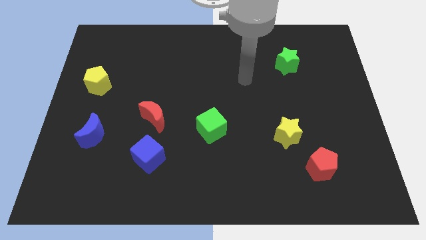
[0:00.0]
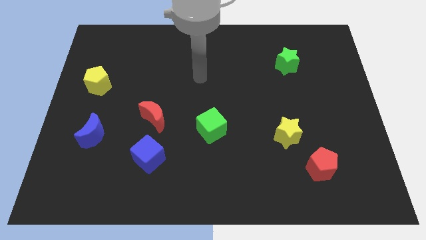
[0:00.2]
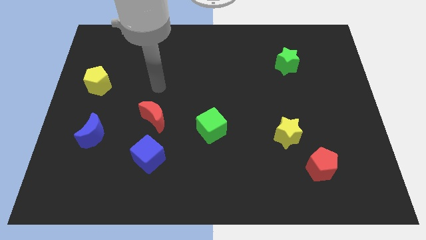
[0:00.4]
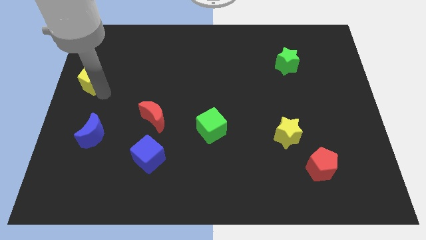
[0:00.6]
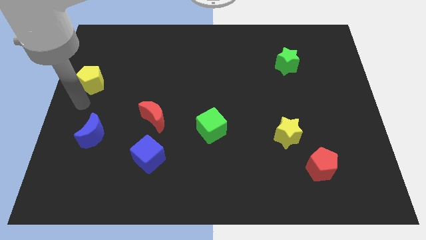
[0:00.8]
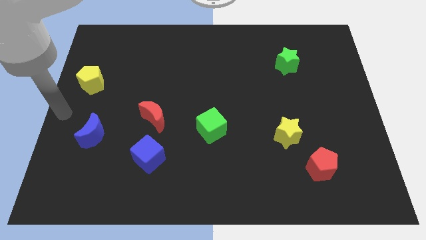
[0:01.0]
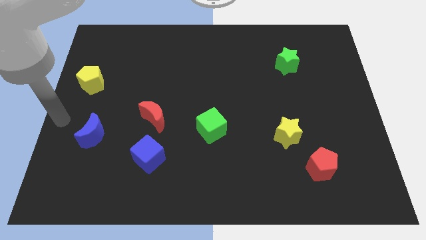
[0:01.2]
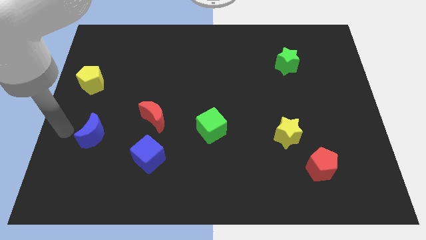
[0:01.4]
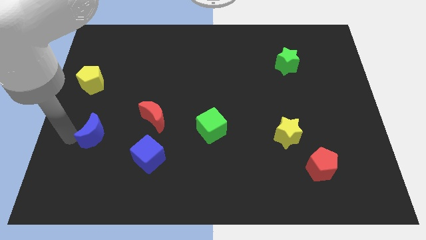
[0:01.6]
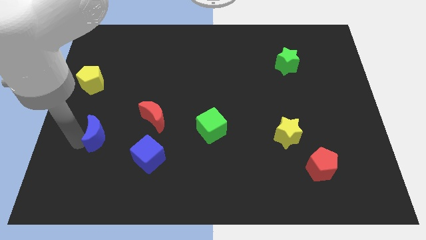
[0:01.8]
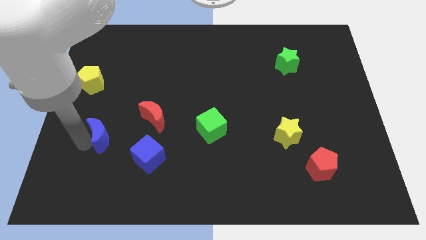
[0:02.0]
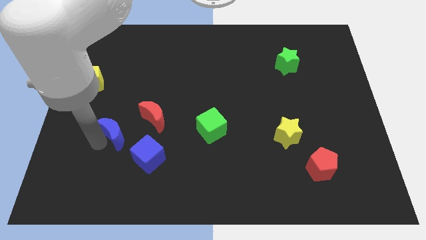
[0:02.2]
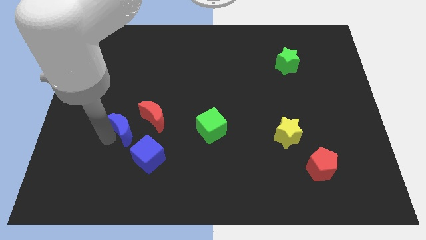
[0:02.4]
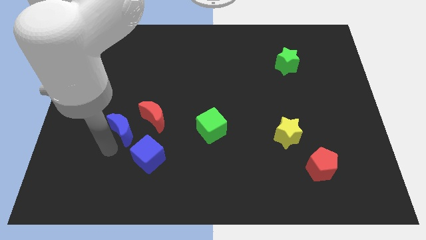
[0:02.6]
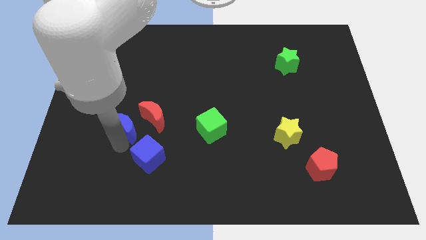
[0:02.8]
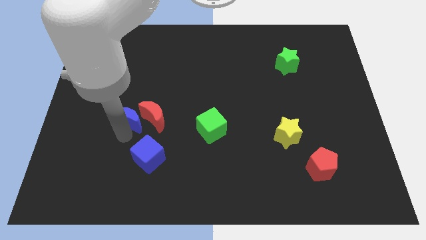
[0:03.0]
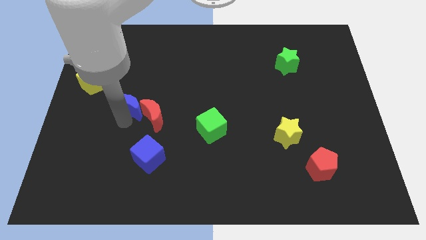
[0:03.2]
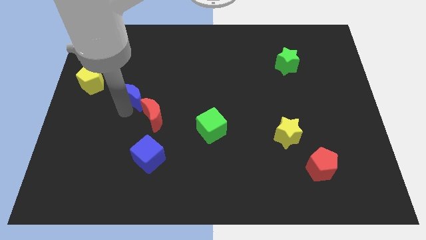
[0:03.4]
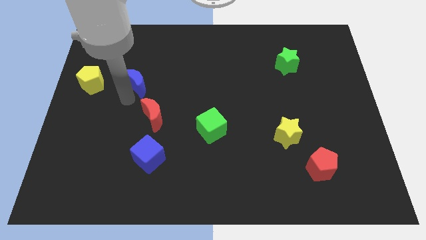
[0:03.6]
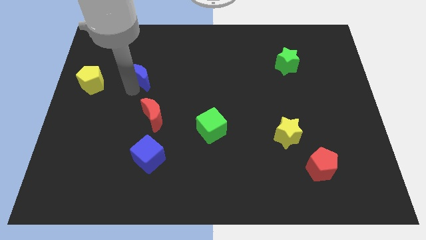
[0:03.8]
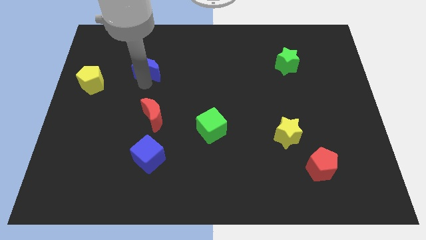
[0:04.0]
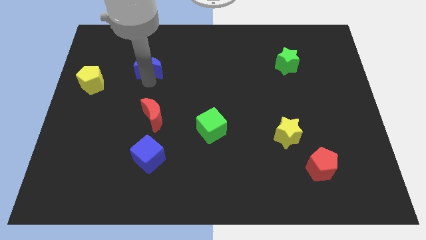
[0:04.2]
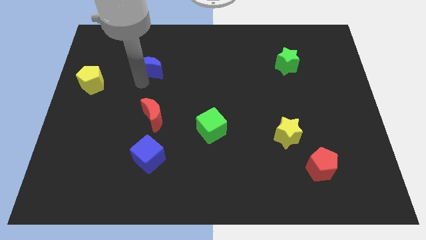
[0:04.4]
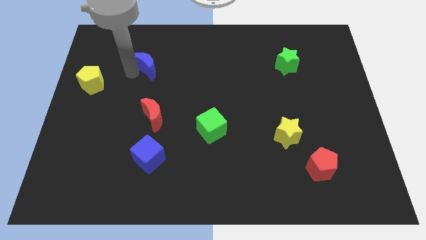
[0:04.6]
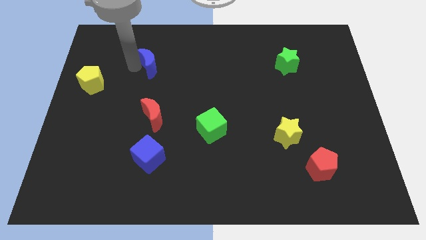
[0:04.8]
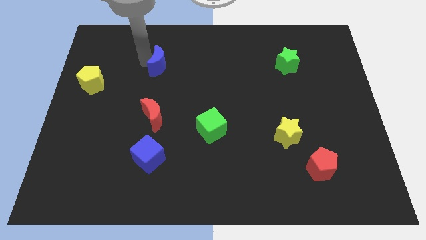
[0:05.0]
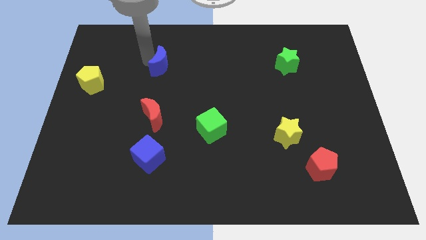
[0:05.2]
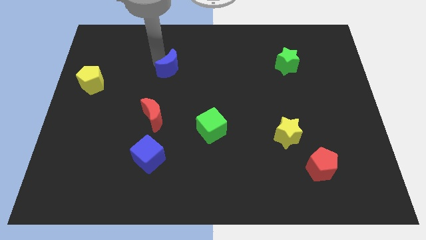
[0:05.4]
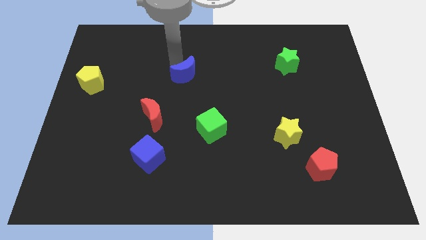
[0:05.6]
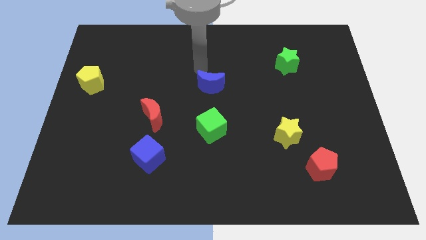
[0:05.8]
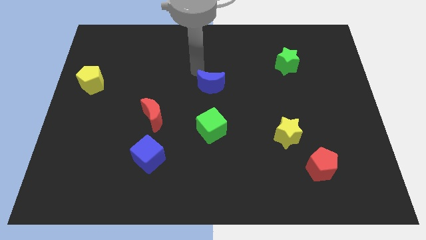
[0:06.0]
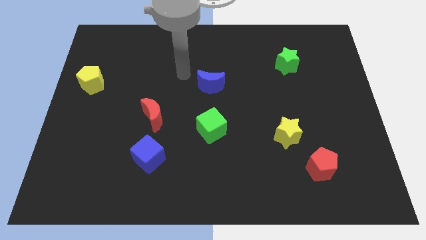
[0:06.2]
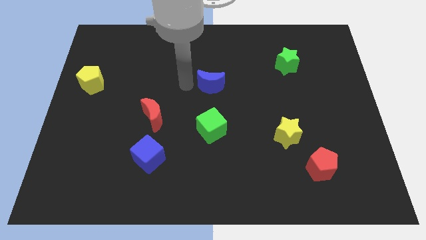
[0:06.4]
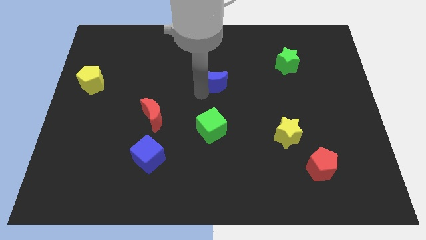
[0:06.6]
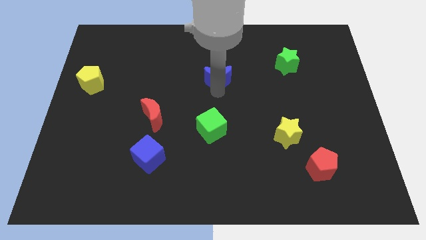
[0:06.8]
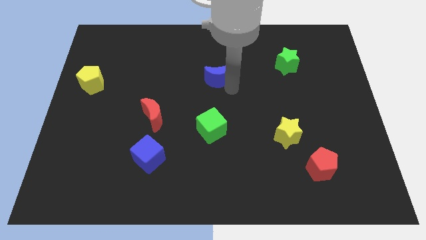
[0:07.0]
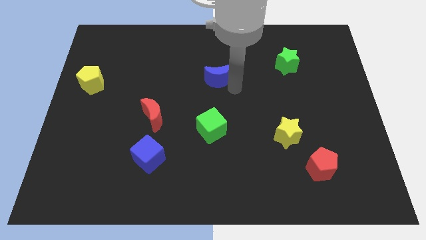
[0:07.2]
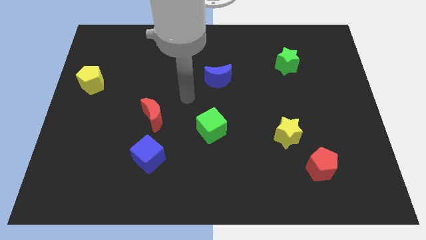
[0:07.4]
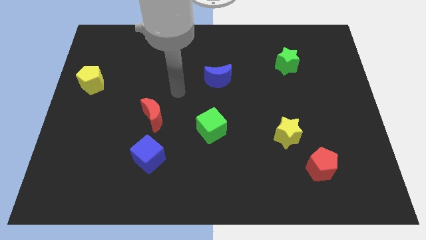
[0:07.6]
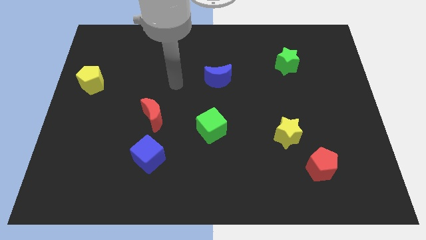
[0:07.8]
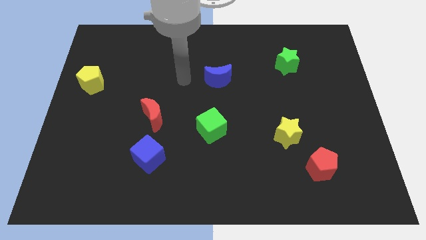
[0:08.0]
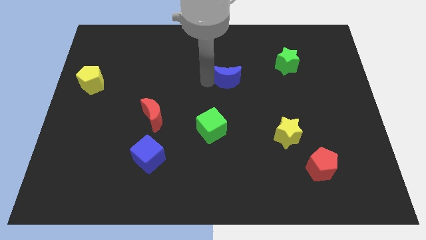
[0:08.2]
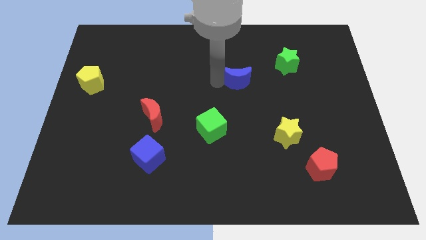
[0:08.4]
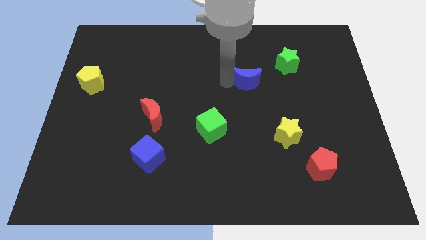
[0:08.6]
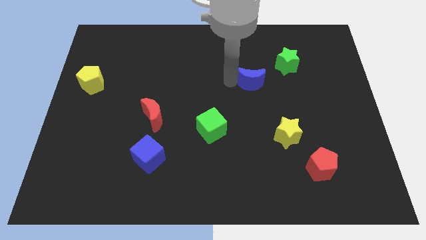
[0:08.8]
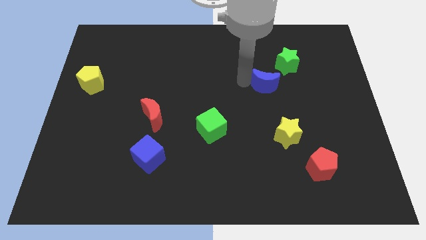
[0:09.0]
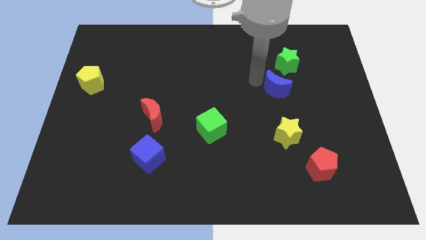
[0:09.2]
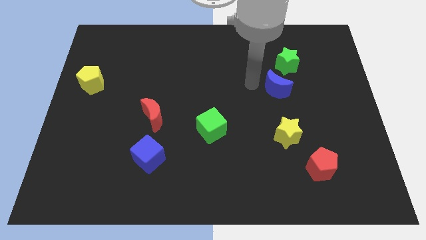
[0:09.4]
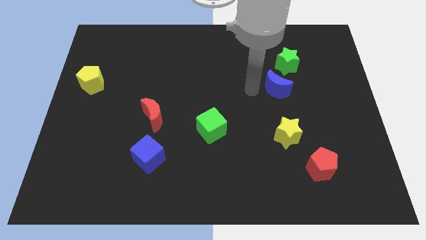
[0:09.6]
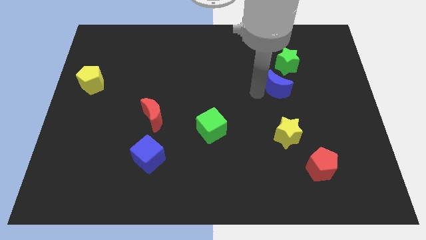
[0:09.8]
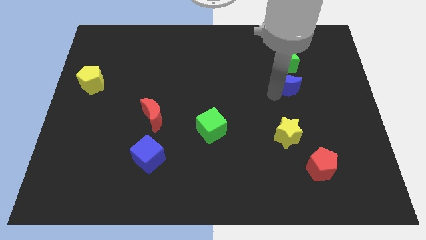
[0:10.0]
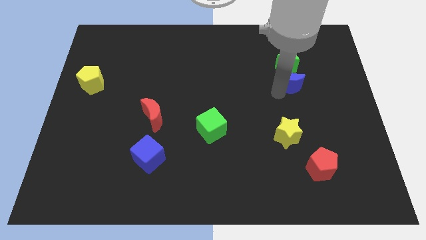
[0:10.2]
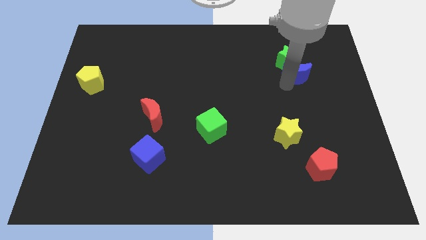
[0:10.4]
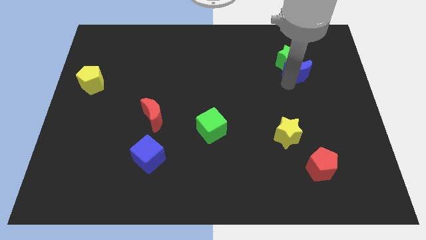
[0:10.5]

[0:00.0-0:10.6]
slide the blue moon close to the green star

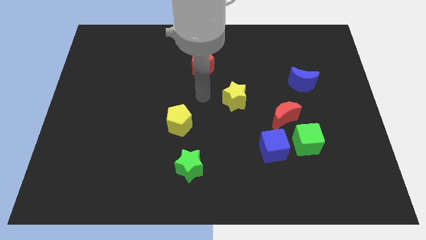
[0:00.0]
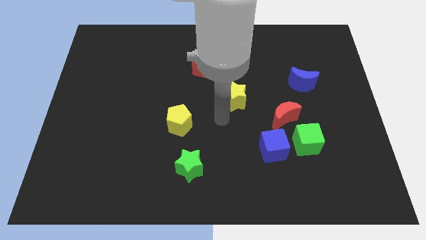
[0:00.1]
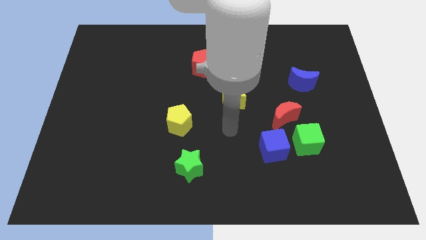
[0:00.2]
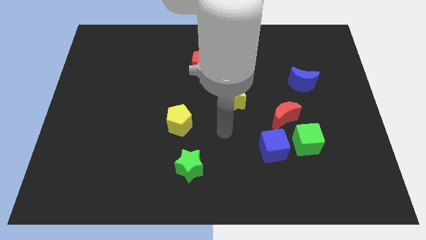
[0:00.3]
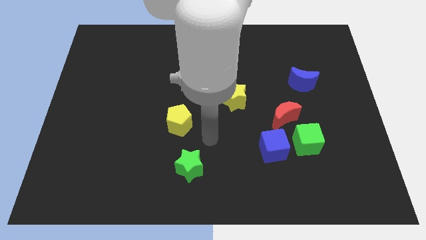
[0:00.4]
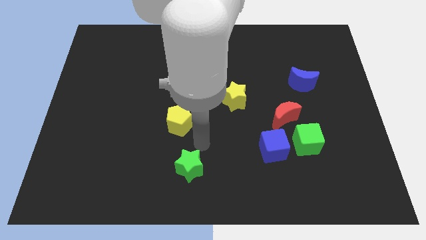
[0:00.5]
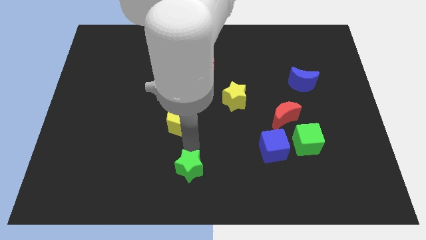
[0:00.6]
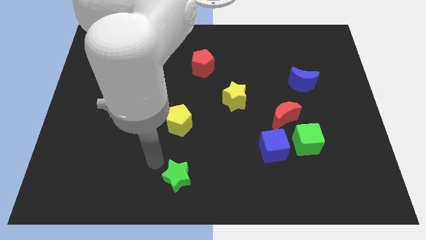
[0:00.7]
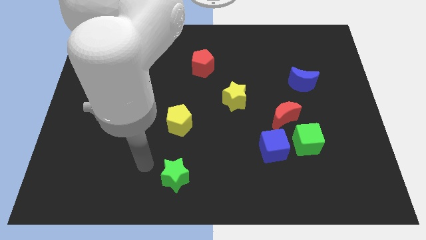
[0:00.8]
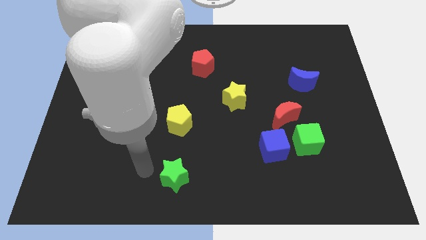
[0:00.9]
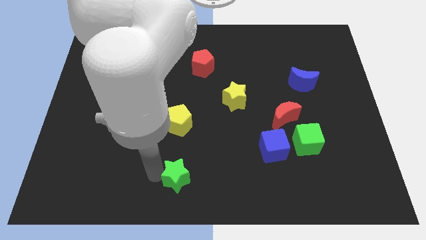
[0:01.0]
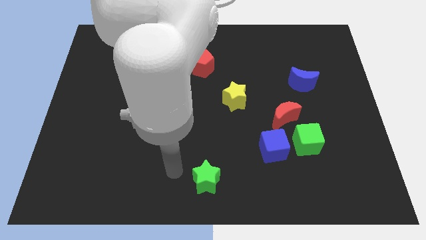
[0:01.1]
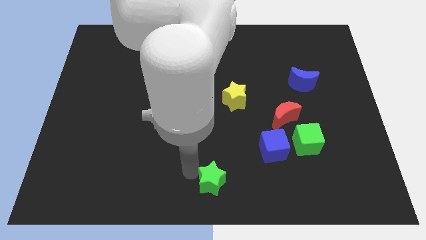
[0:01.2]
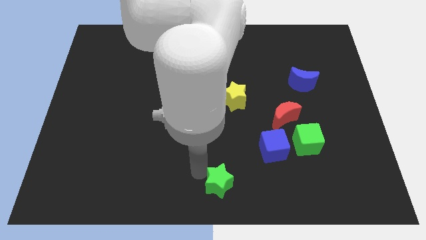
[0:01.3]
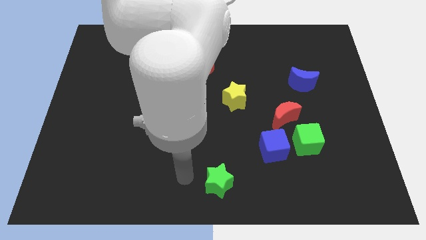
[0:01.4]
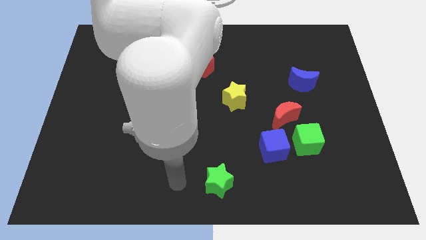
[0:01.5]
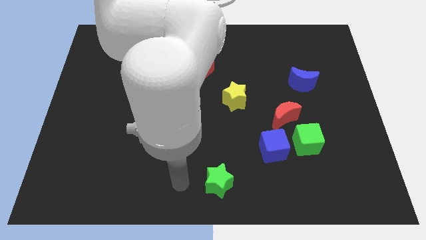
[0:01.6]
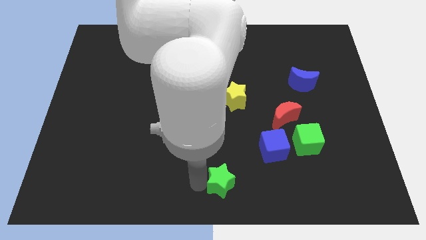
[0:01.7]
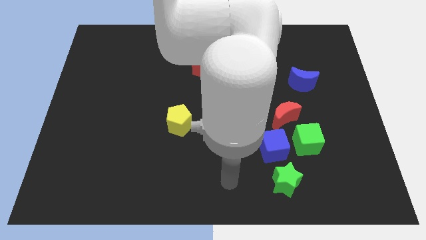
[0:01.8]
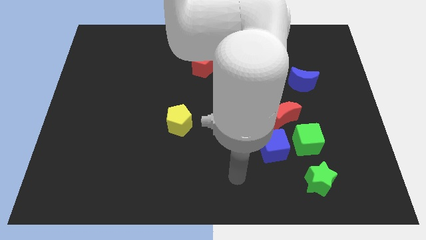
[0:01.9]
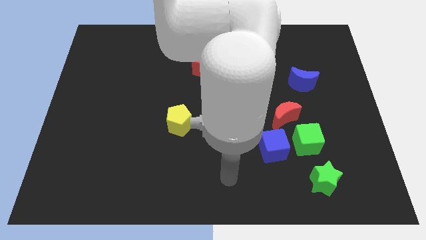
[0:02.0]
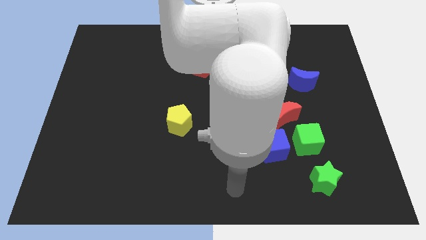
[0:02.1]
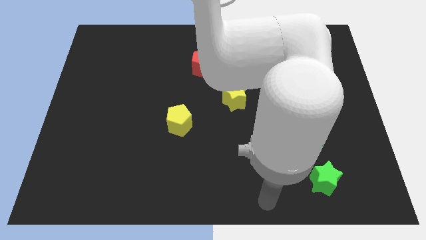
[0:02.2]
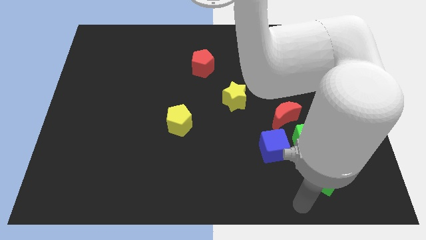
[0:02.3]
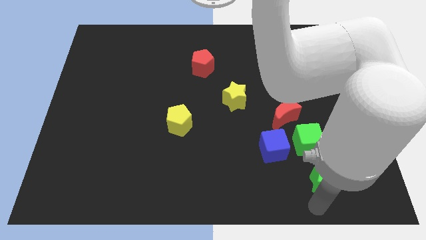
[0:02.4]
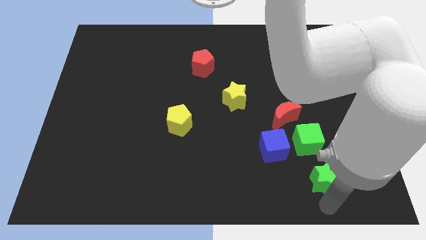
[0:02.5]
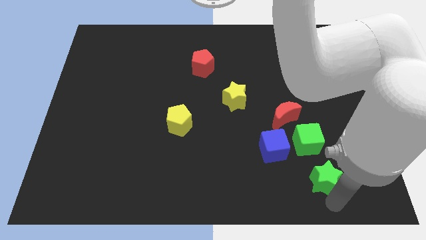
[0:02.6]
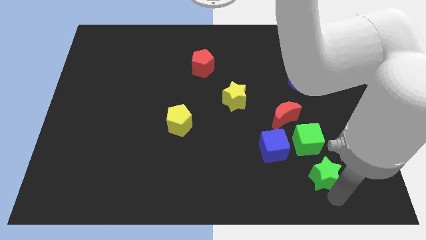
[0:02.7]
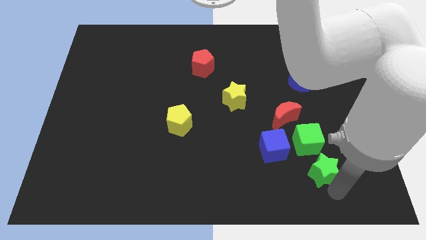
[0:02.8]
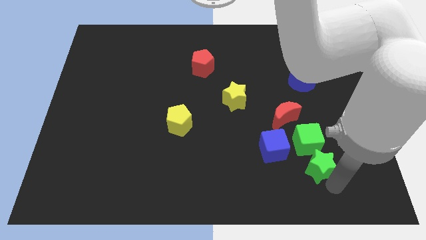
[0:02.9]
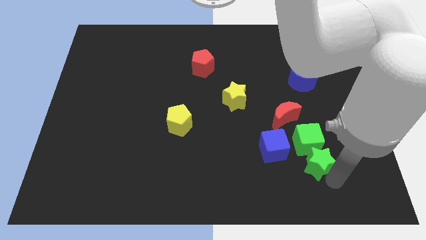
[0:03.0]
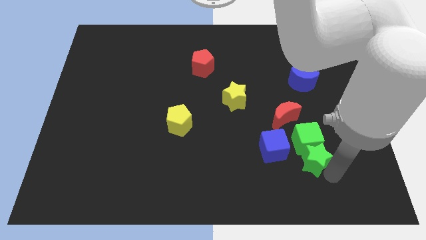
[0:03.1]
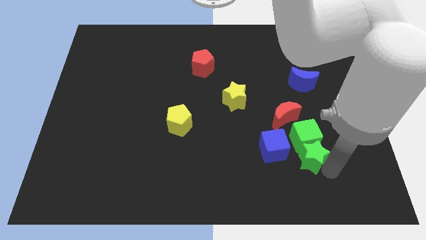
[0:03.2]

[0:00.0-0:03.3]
push the green star next to the green cube

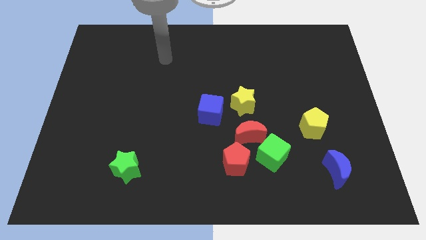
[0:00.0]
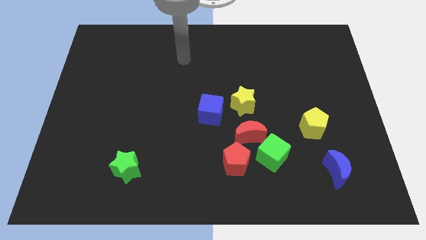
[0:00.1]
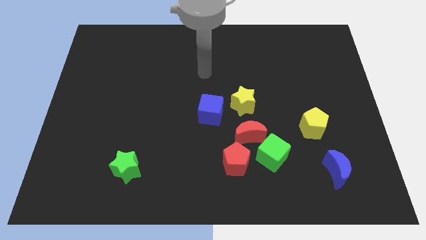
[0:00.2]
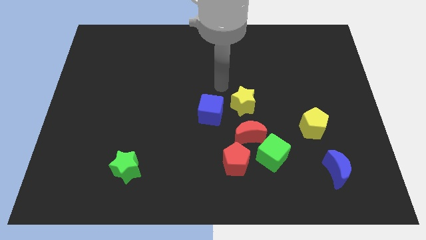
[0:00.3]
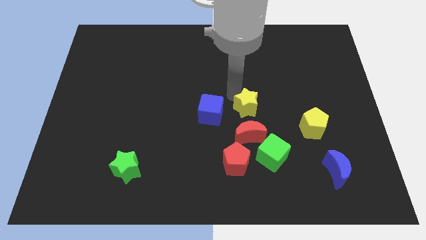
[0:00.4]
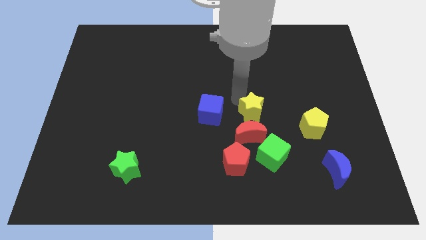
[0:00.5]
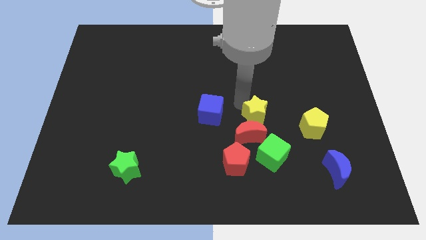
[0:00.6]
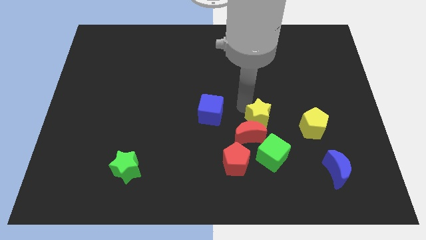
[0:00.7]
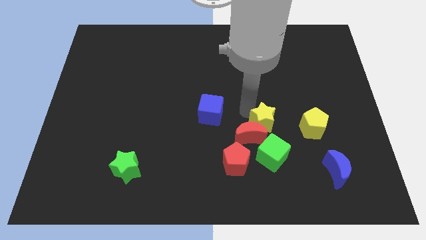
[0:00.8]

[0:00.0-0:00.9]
slide the yellow star close to the red moon
